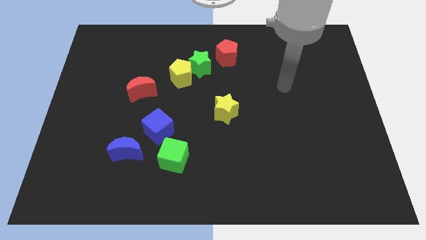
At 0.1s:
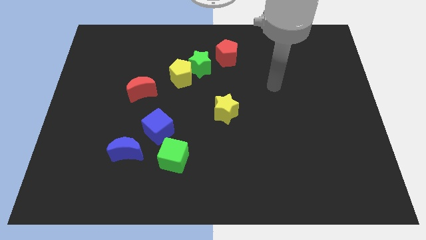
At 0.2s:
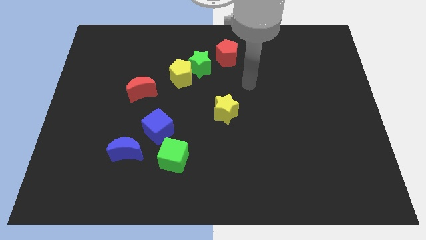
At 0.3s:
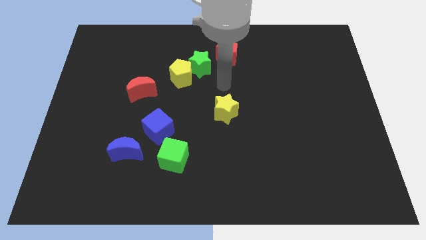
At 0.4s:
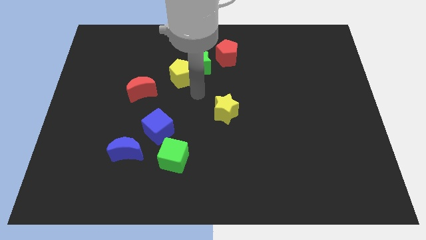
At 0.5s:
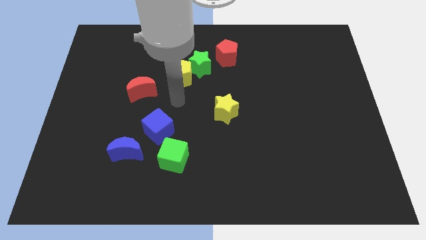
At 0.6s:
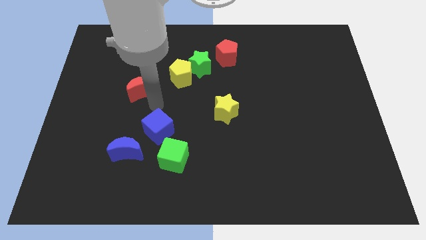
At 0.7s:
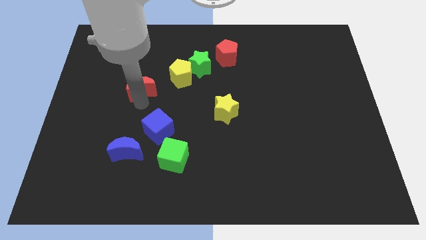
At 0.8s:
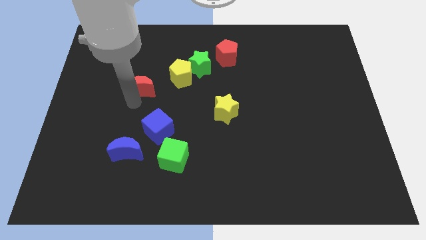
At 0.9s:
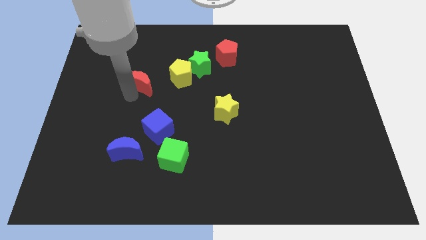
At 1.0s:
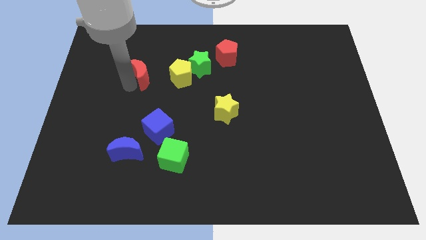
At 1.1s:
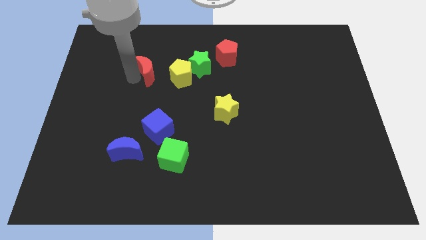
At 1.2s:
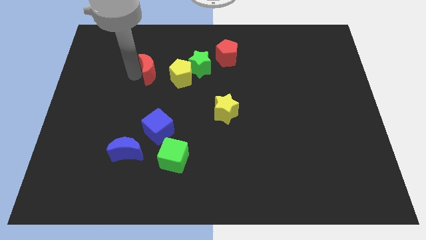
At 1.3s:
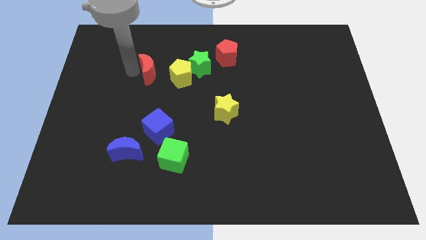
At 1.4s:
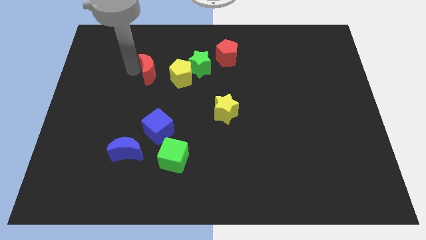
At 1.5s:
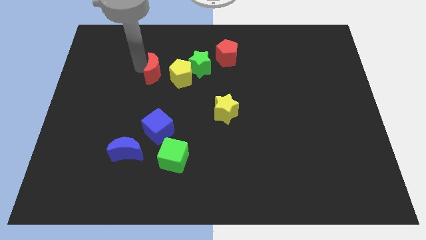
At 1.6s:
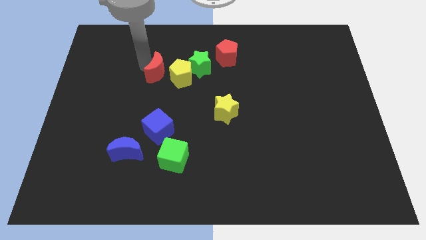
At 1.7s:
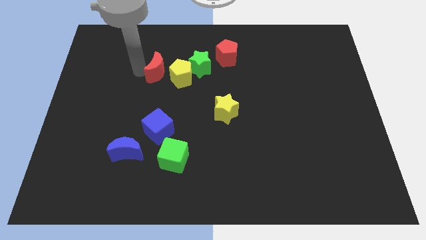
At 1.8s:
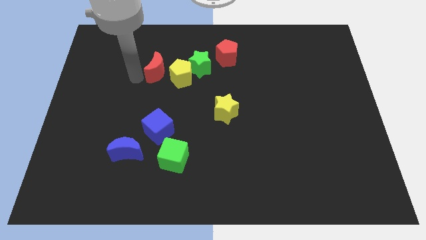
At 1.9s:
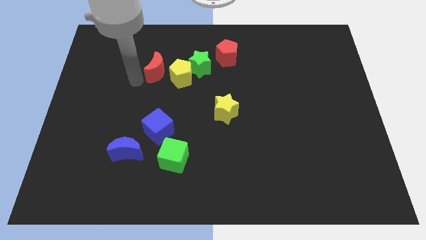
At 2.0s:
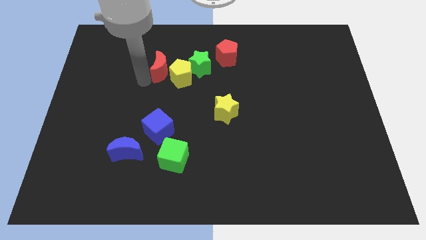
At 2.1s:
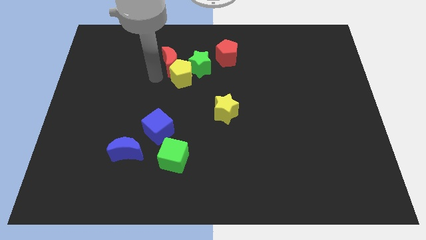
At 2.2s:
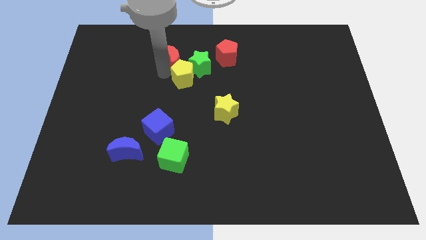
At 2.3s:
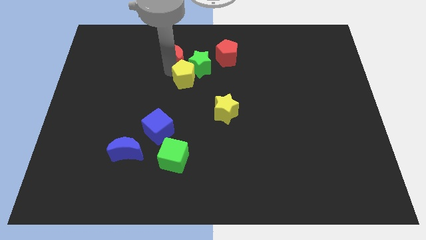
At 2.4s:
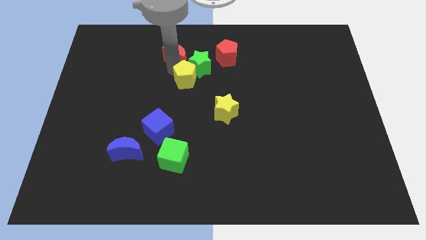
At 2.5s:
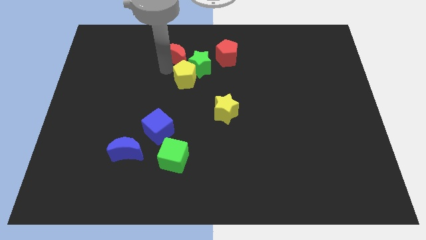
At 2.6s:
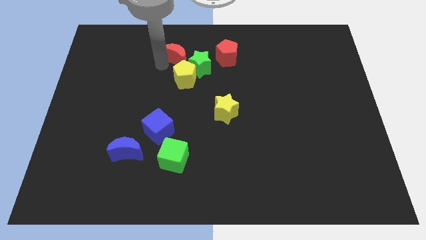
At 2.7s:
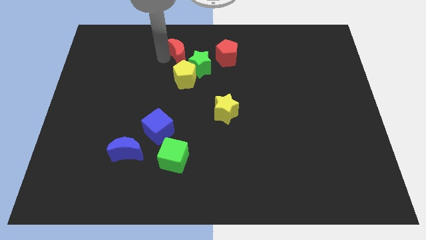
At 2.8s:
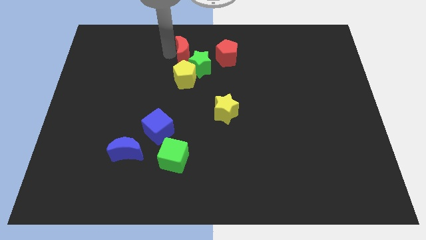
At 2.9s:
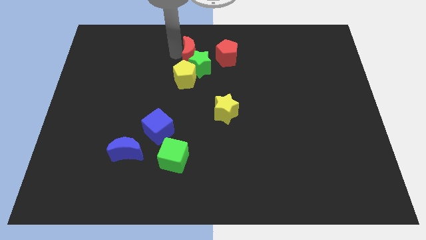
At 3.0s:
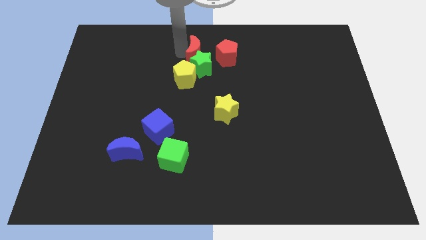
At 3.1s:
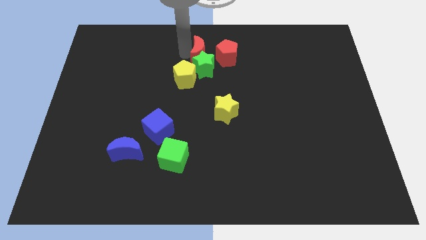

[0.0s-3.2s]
put the red moon towards the green star

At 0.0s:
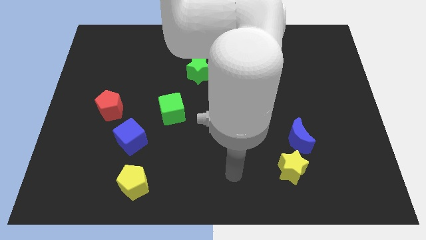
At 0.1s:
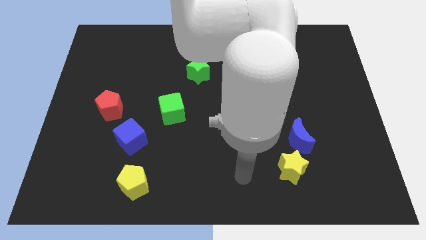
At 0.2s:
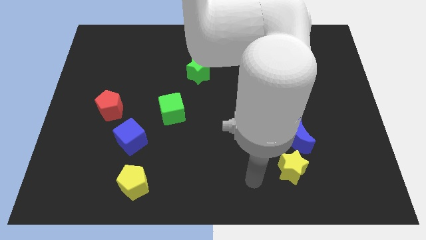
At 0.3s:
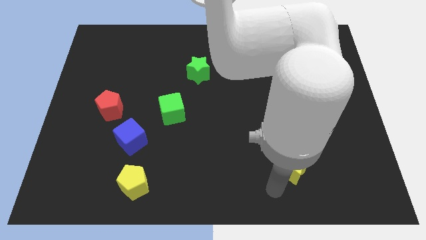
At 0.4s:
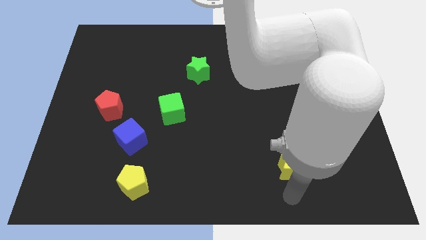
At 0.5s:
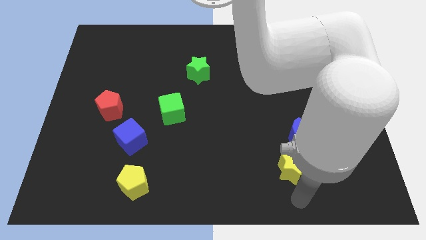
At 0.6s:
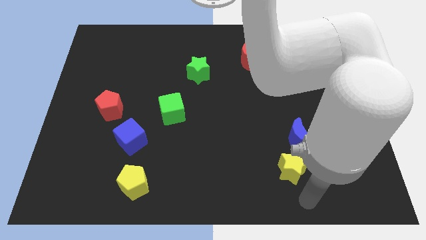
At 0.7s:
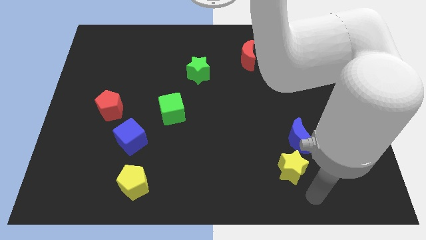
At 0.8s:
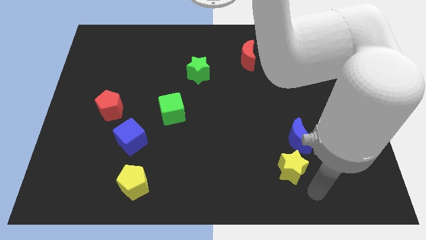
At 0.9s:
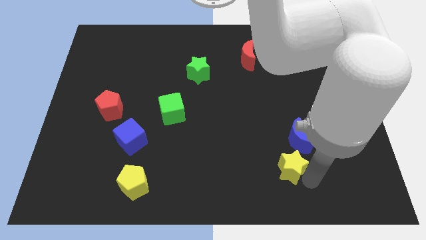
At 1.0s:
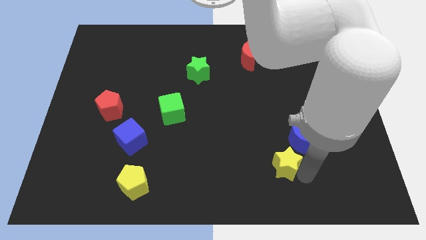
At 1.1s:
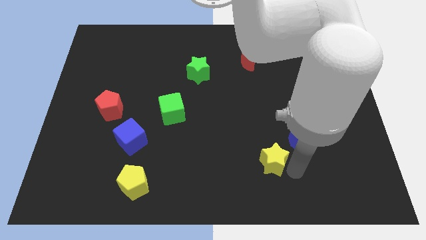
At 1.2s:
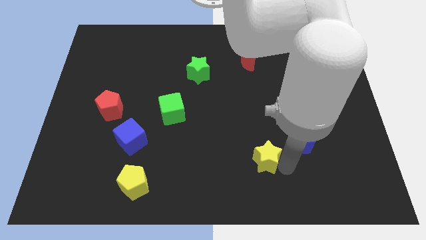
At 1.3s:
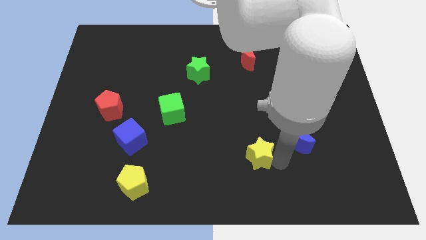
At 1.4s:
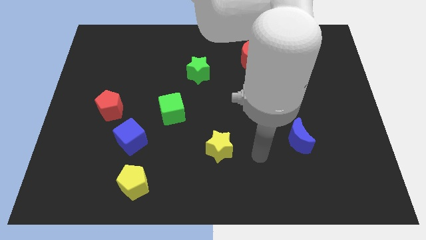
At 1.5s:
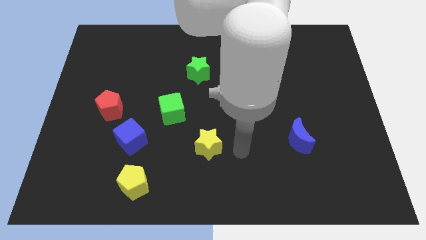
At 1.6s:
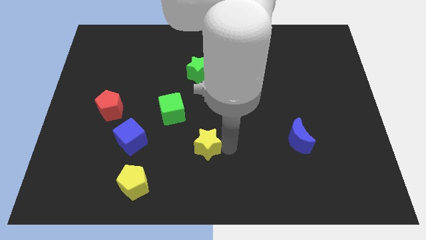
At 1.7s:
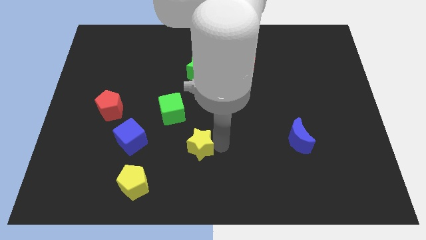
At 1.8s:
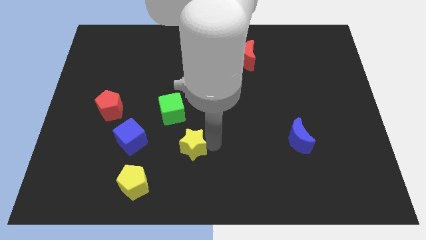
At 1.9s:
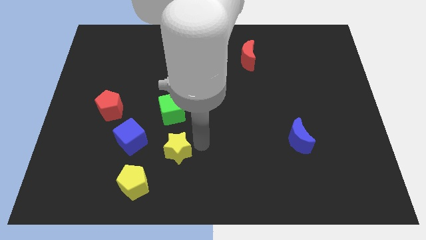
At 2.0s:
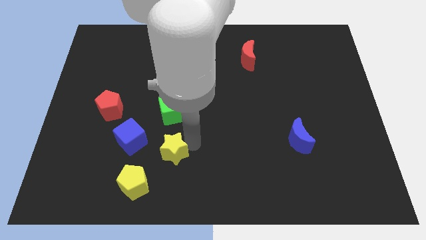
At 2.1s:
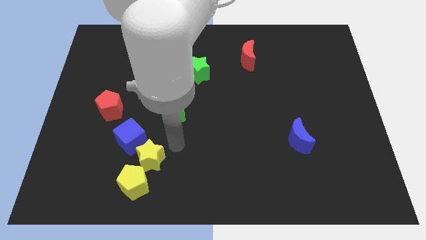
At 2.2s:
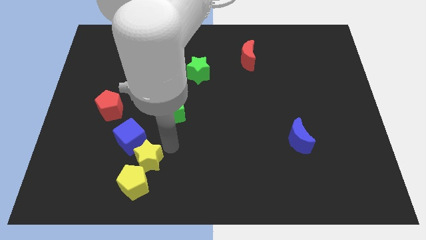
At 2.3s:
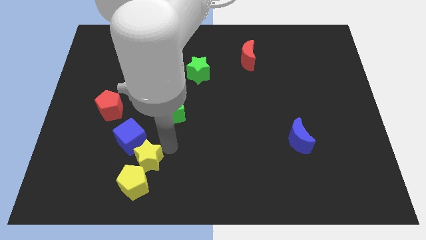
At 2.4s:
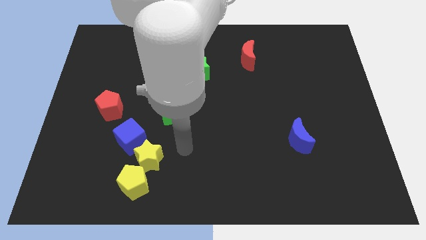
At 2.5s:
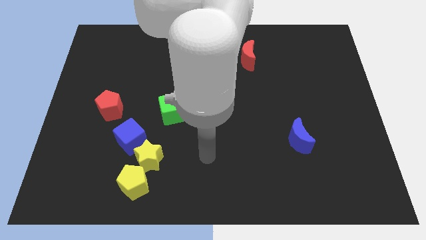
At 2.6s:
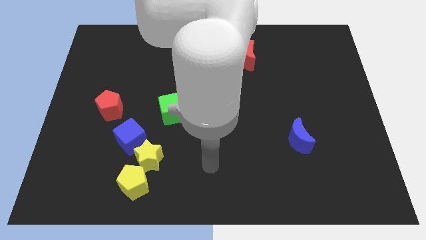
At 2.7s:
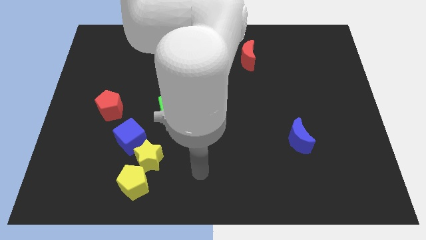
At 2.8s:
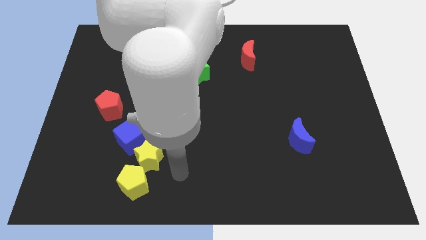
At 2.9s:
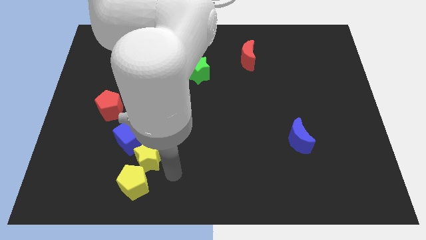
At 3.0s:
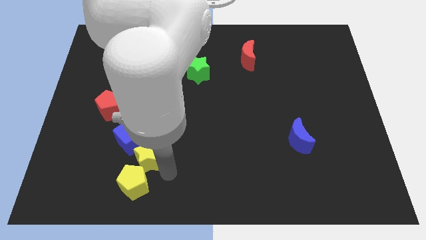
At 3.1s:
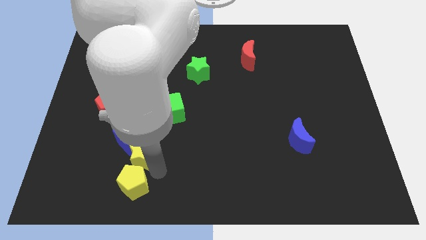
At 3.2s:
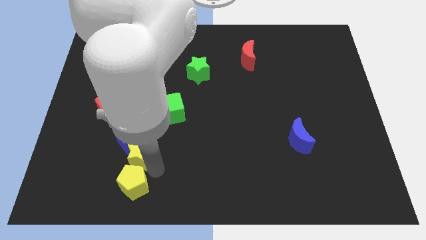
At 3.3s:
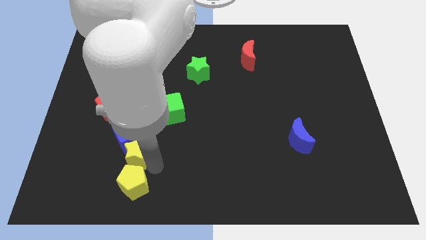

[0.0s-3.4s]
slide the yellow star close to the blue cube

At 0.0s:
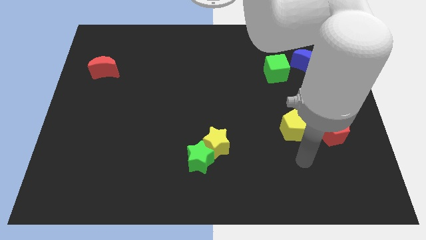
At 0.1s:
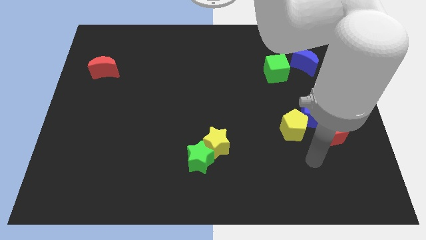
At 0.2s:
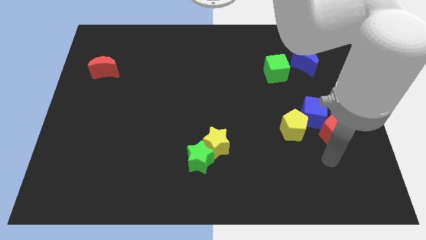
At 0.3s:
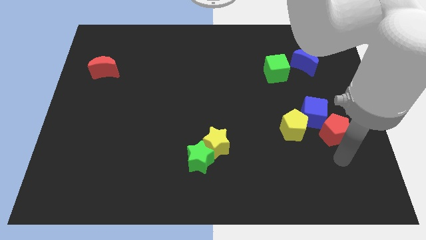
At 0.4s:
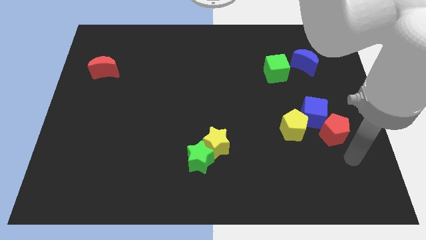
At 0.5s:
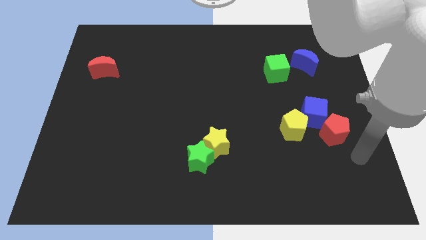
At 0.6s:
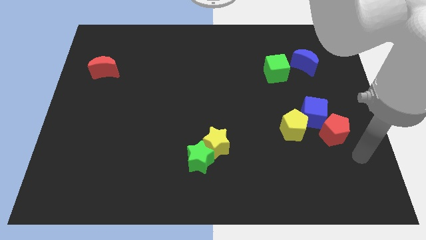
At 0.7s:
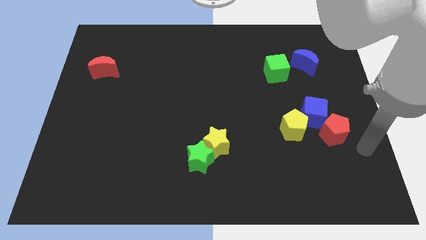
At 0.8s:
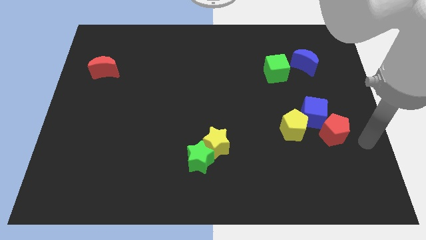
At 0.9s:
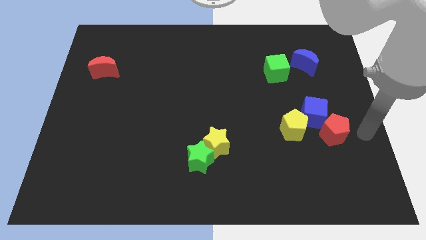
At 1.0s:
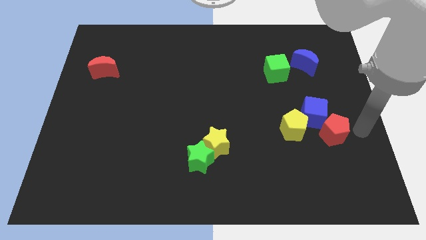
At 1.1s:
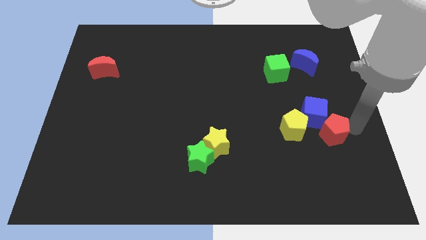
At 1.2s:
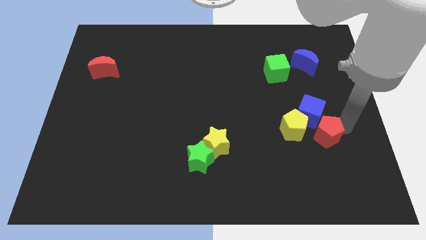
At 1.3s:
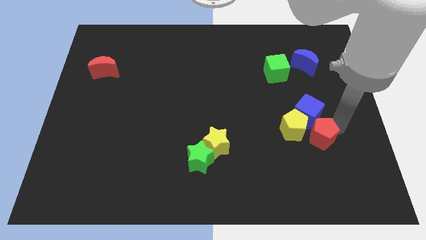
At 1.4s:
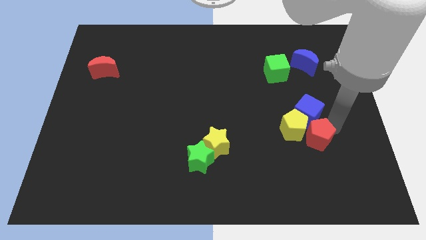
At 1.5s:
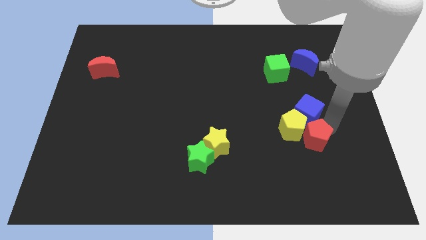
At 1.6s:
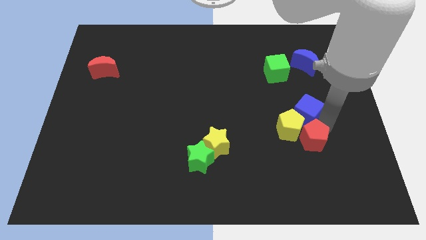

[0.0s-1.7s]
put the red pentagon towards the yellow pentagon
